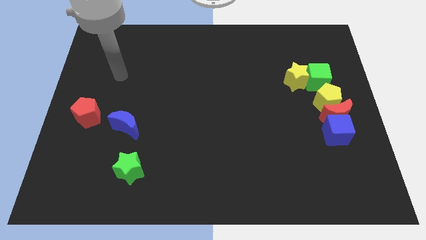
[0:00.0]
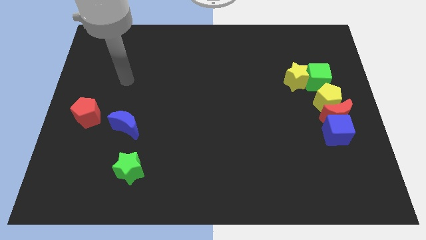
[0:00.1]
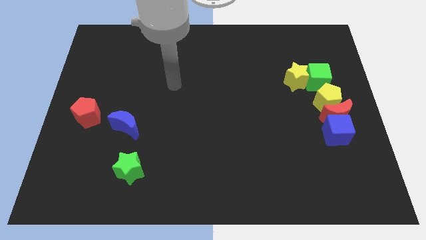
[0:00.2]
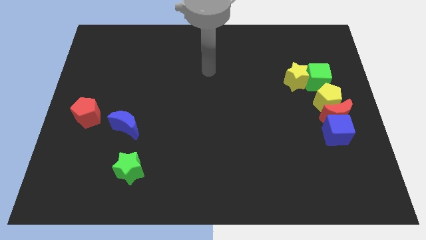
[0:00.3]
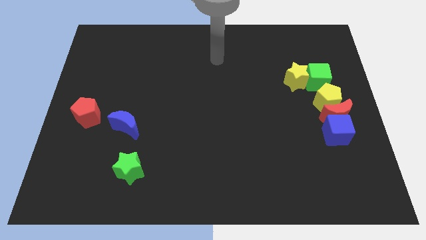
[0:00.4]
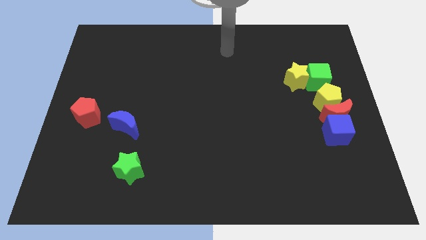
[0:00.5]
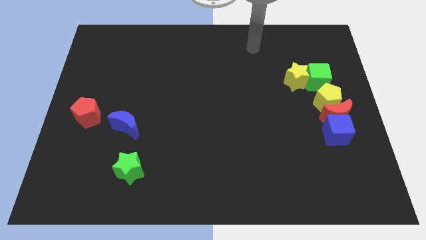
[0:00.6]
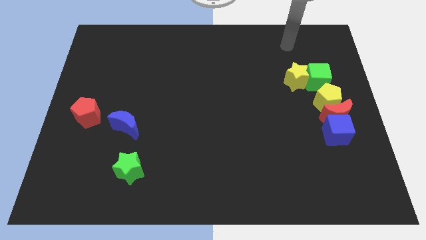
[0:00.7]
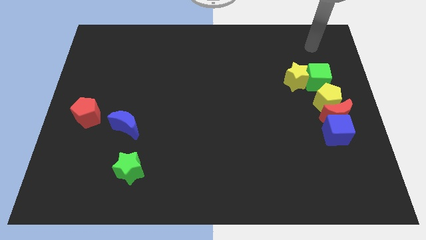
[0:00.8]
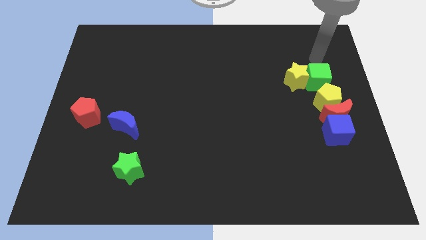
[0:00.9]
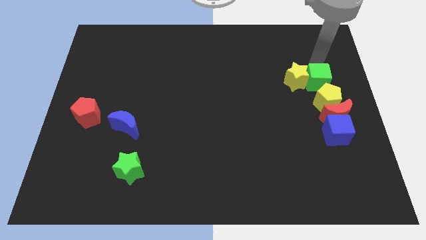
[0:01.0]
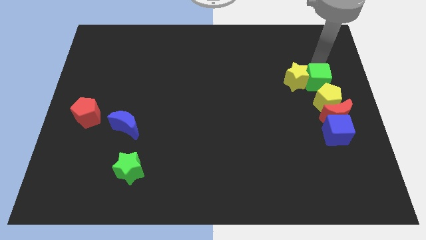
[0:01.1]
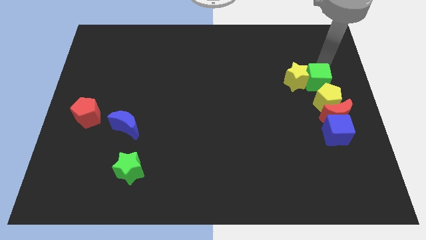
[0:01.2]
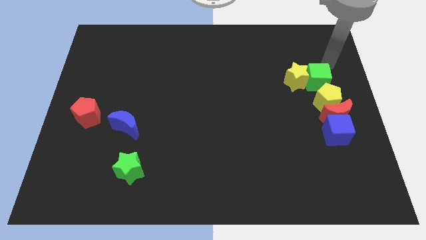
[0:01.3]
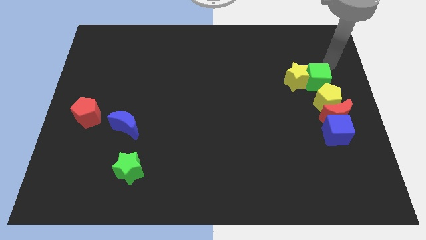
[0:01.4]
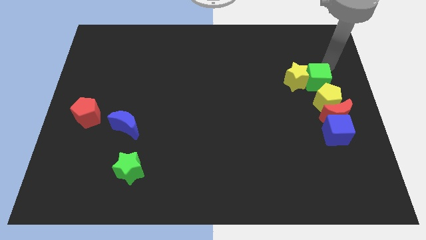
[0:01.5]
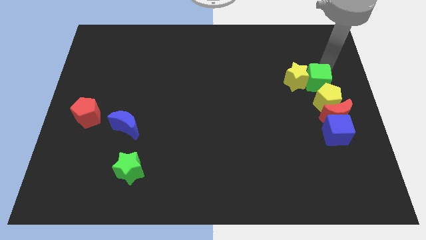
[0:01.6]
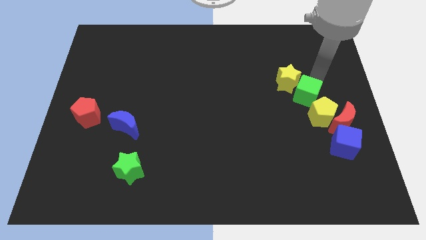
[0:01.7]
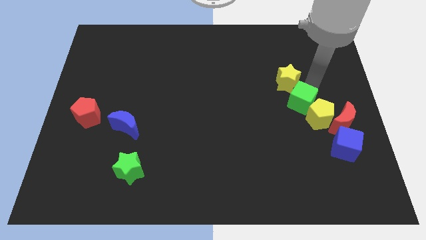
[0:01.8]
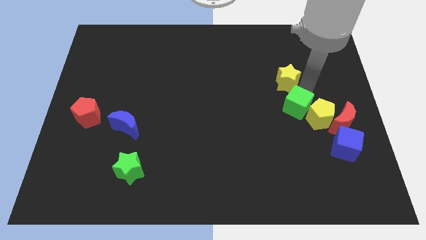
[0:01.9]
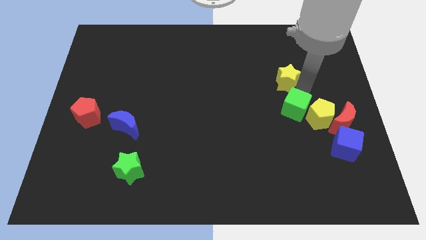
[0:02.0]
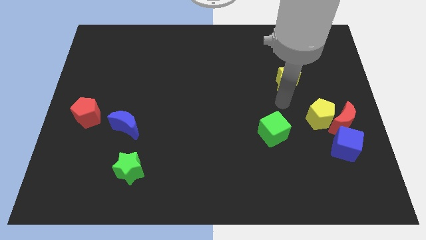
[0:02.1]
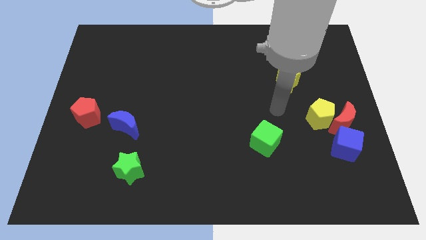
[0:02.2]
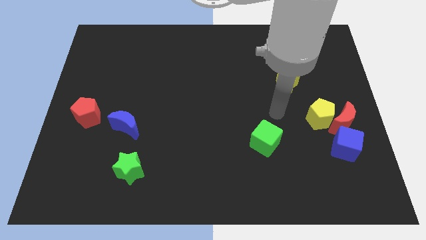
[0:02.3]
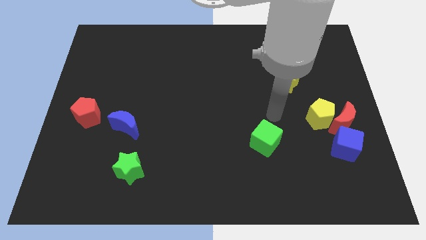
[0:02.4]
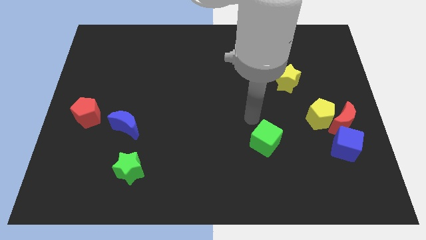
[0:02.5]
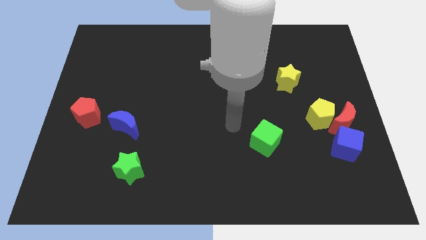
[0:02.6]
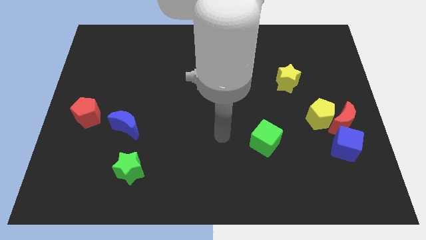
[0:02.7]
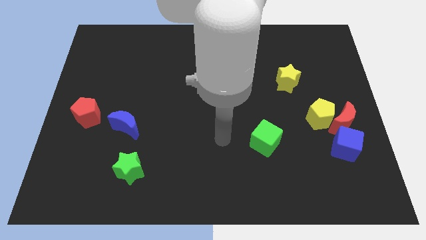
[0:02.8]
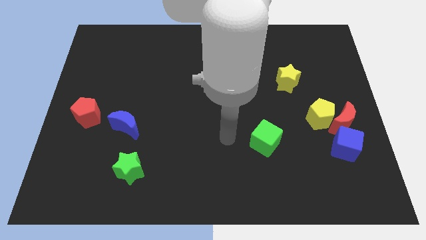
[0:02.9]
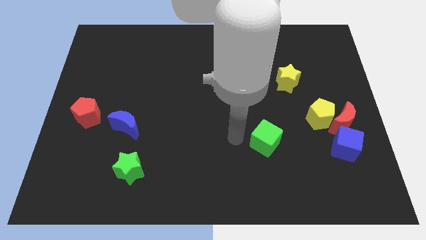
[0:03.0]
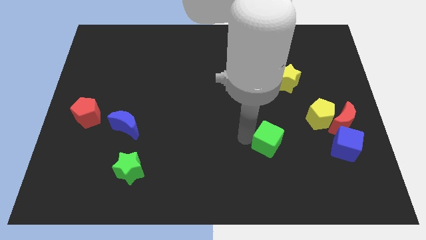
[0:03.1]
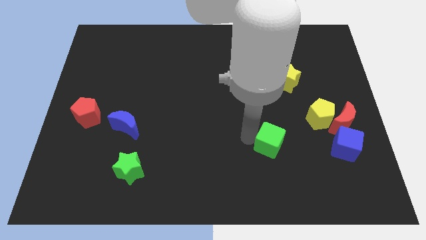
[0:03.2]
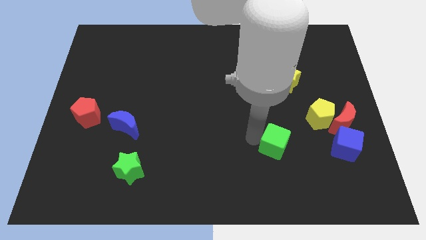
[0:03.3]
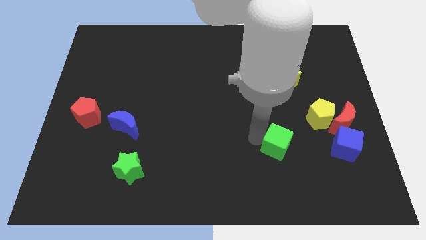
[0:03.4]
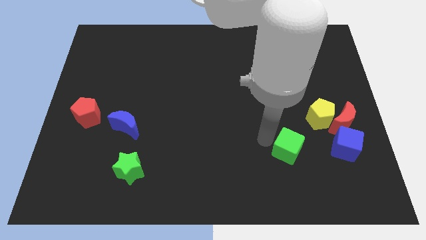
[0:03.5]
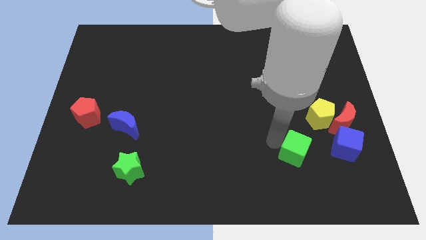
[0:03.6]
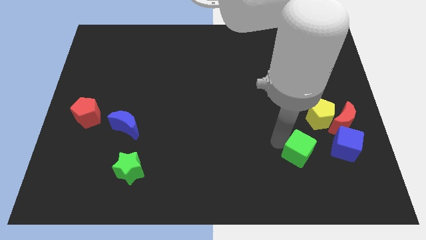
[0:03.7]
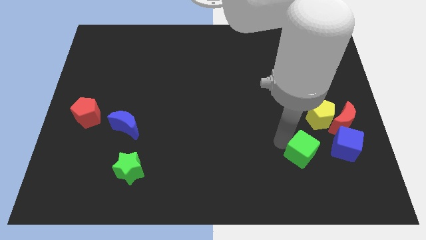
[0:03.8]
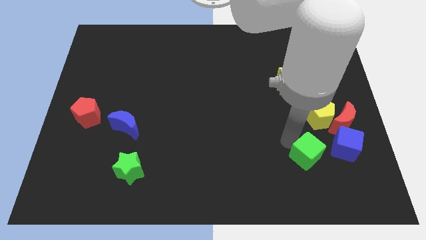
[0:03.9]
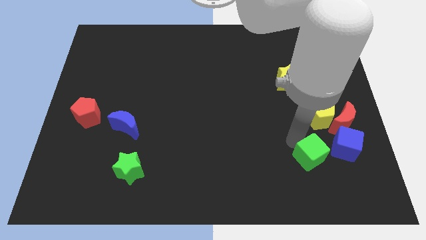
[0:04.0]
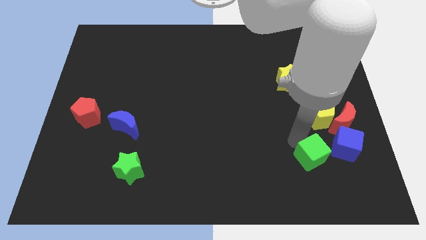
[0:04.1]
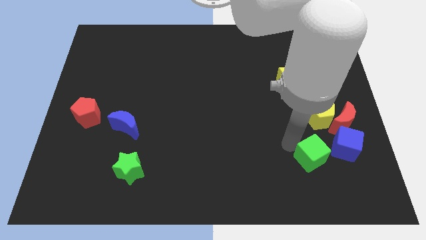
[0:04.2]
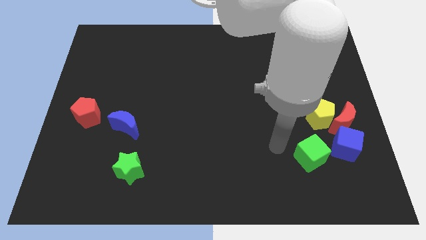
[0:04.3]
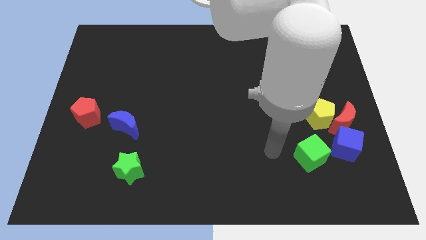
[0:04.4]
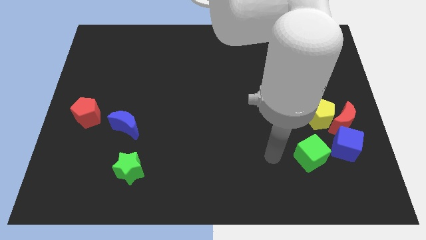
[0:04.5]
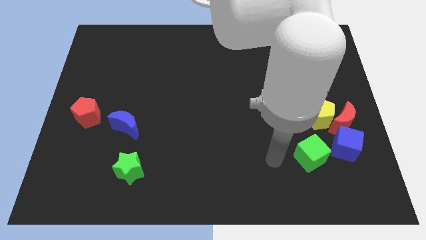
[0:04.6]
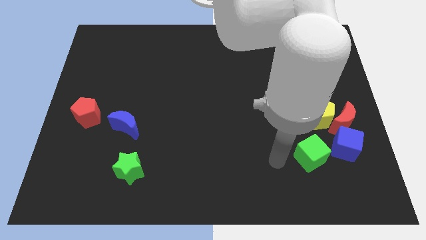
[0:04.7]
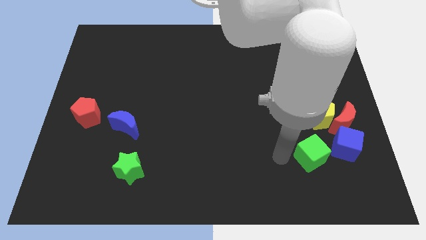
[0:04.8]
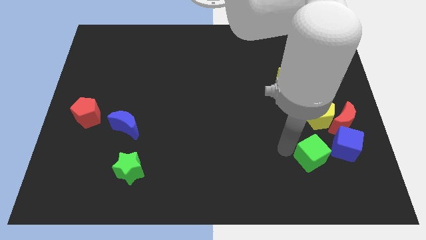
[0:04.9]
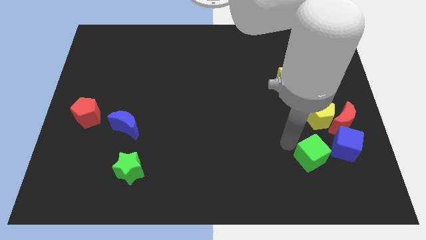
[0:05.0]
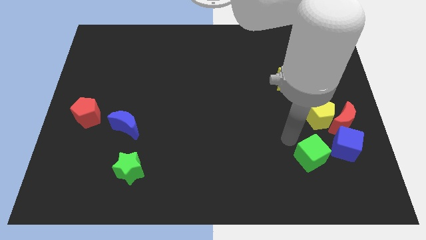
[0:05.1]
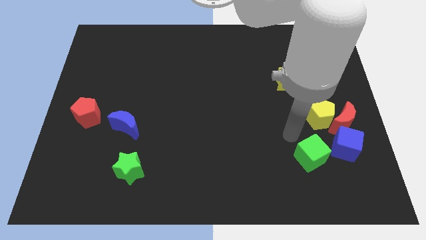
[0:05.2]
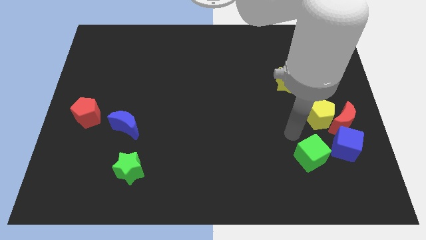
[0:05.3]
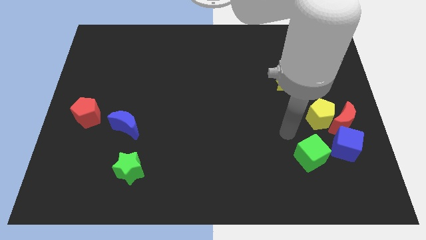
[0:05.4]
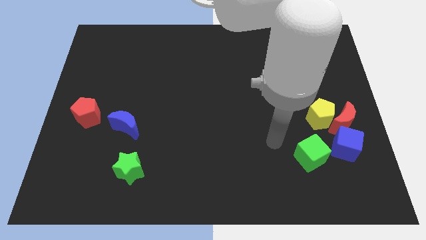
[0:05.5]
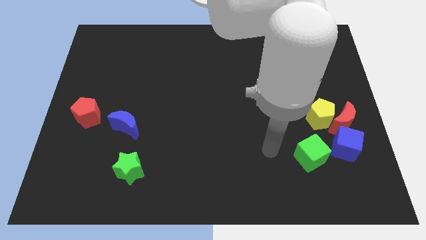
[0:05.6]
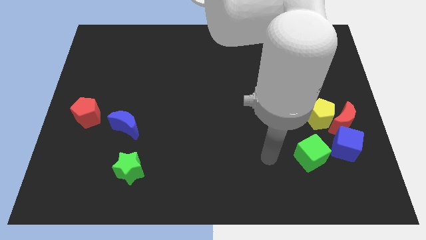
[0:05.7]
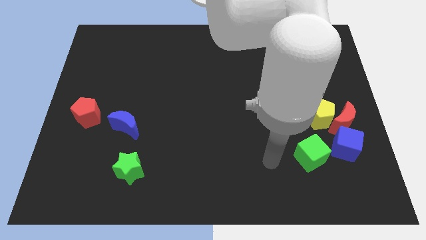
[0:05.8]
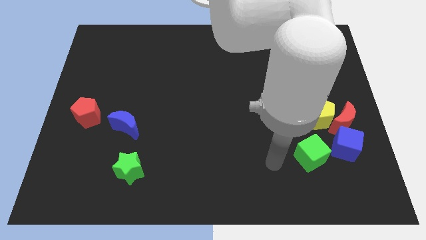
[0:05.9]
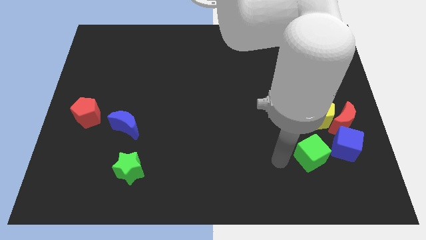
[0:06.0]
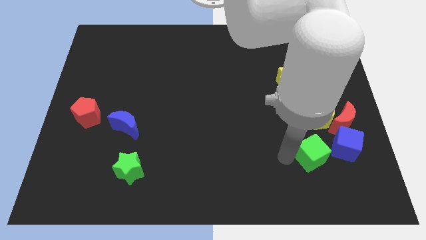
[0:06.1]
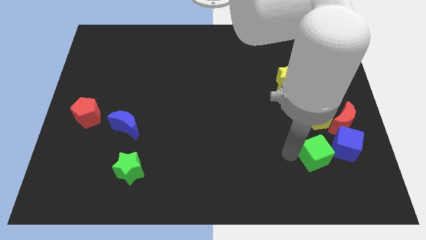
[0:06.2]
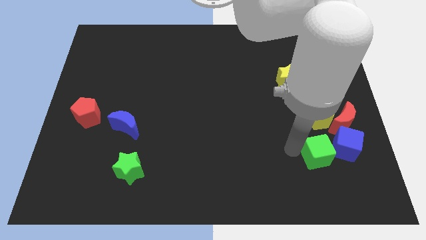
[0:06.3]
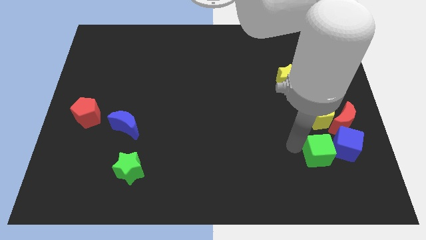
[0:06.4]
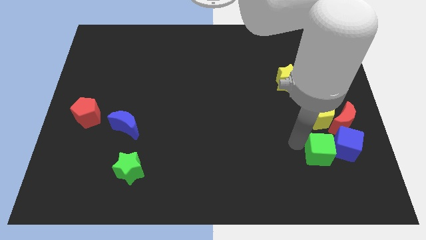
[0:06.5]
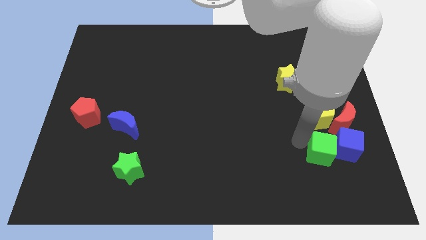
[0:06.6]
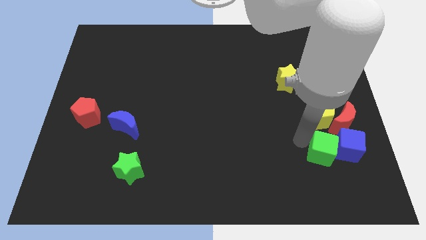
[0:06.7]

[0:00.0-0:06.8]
move the green cube close to the blue cube

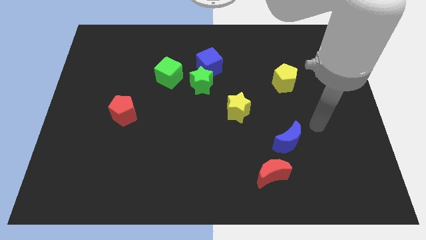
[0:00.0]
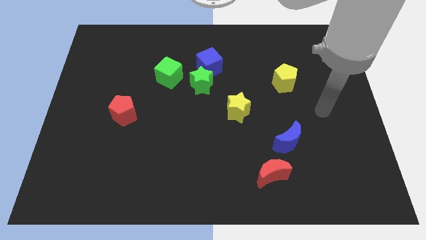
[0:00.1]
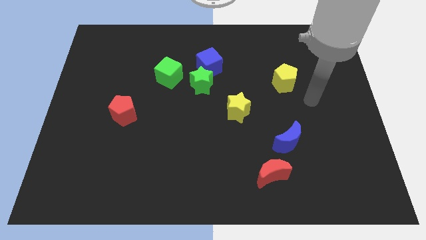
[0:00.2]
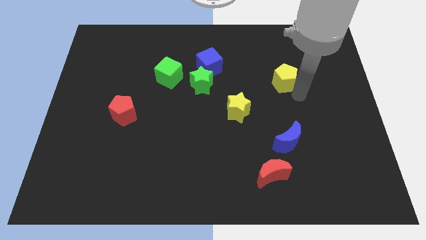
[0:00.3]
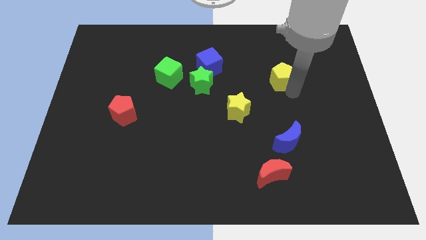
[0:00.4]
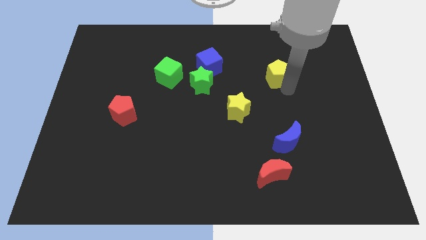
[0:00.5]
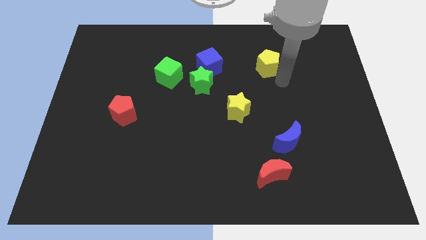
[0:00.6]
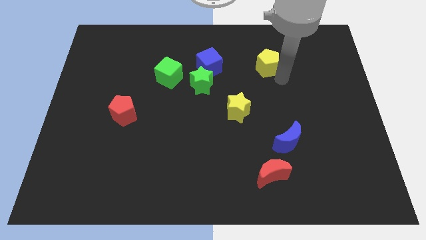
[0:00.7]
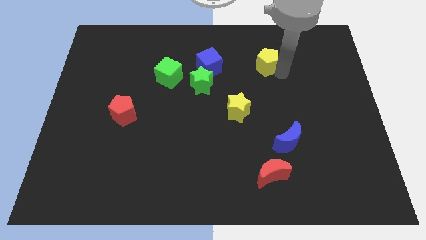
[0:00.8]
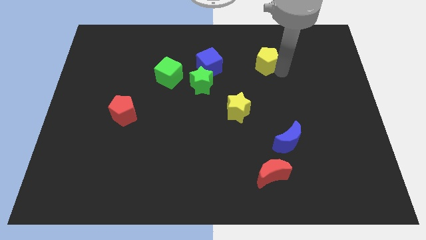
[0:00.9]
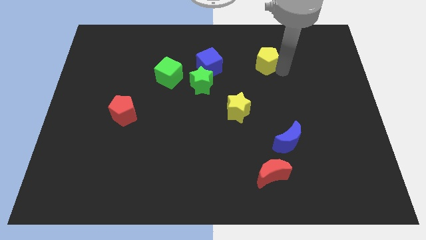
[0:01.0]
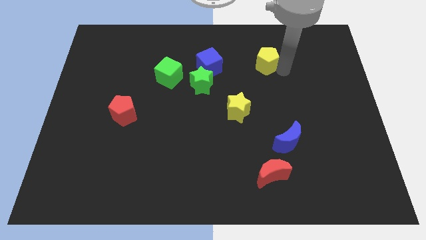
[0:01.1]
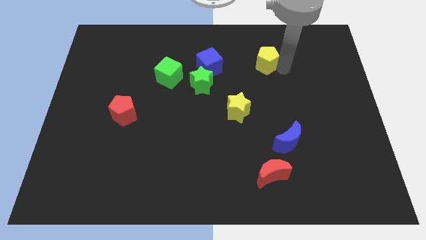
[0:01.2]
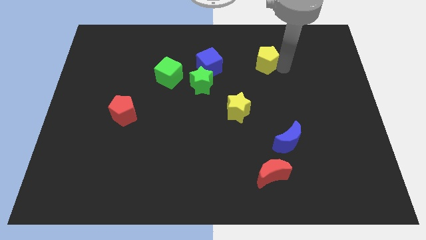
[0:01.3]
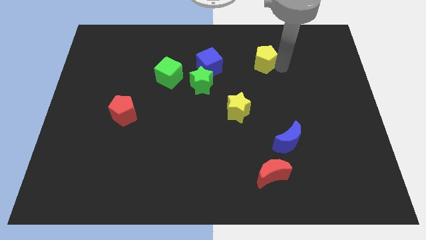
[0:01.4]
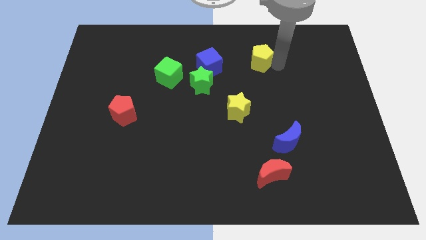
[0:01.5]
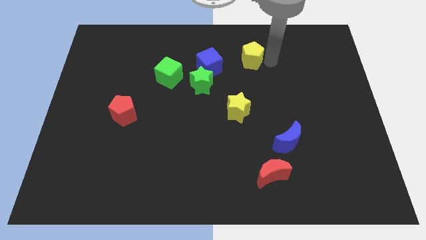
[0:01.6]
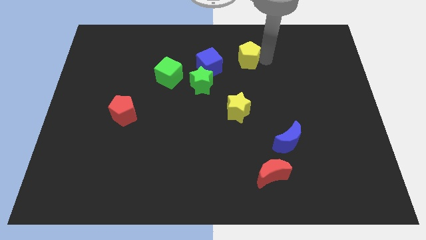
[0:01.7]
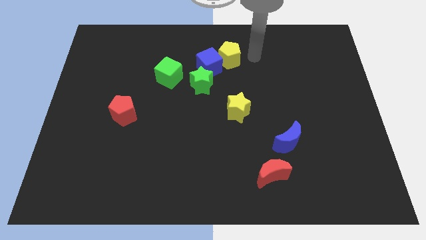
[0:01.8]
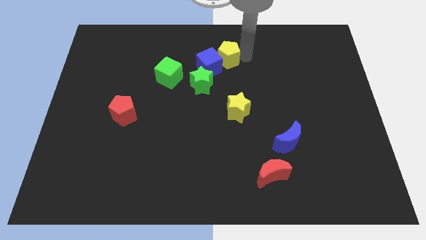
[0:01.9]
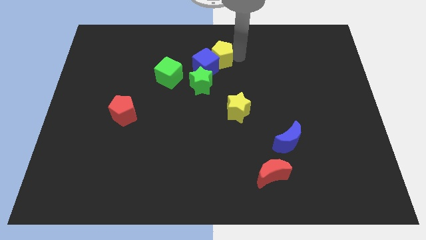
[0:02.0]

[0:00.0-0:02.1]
put the yellow pentagon close to the blue cube
